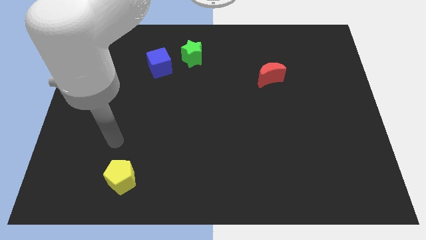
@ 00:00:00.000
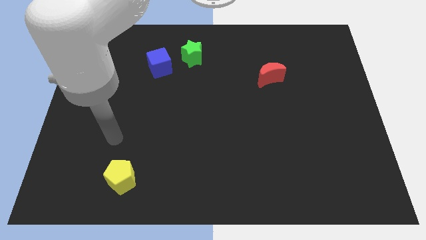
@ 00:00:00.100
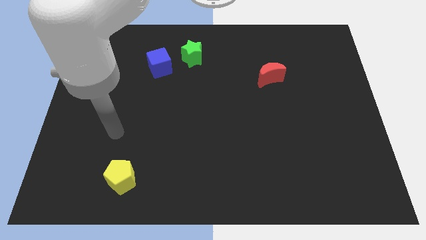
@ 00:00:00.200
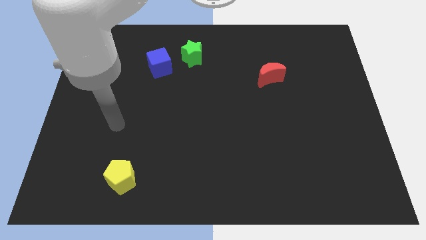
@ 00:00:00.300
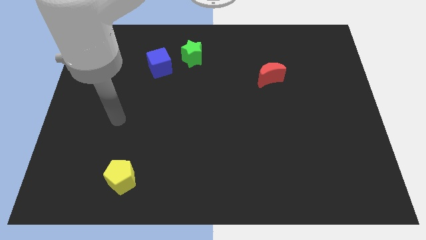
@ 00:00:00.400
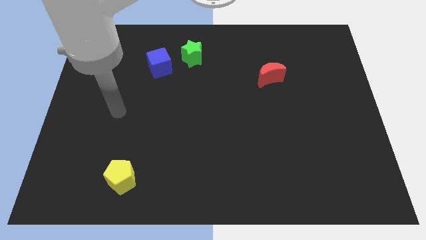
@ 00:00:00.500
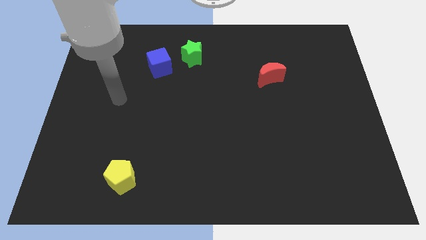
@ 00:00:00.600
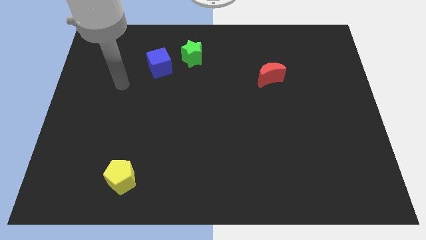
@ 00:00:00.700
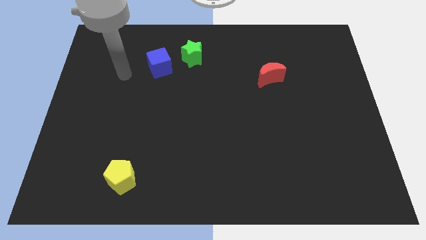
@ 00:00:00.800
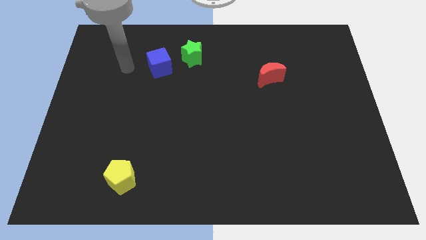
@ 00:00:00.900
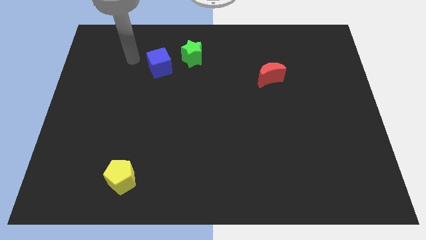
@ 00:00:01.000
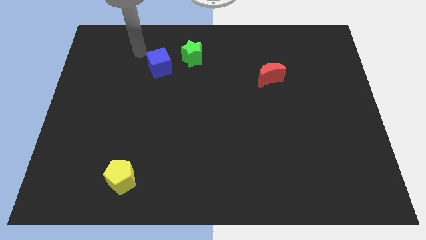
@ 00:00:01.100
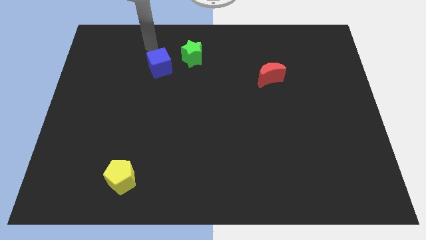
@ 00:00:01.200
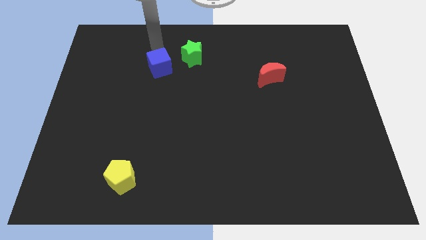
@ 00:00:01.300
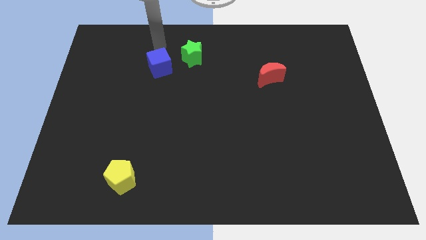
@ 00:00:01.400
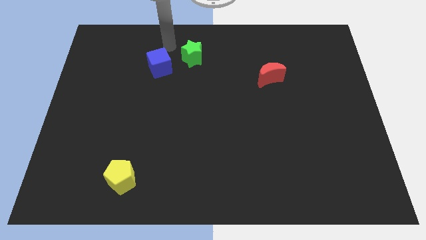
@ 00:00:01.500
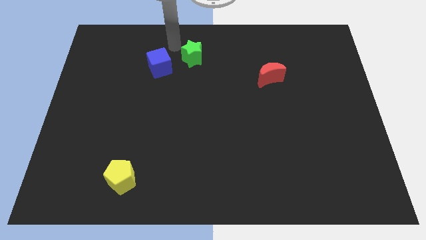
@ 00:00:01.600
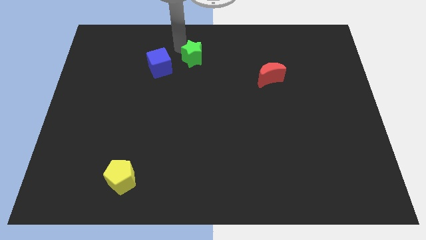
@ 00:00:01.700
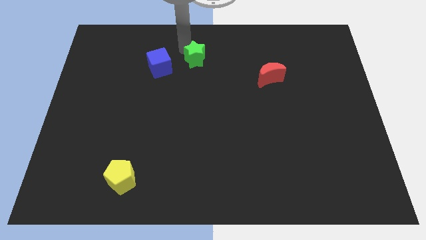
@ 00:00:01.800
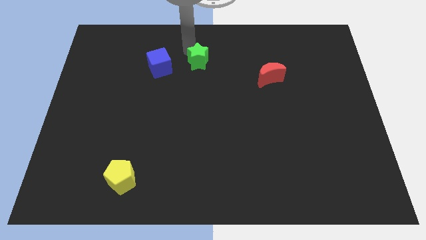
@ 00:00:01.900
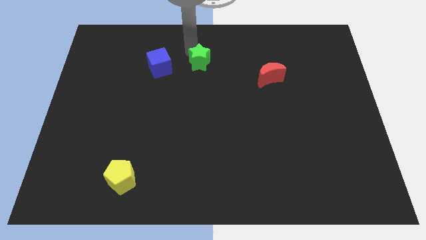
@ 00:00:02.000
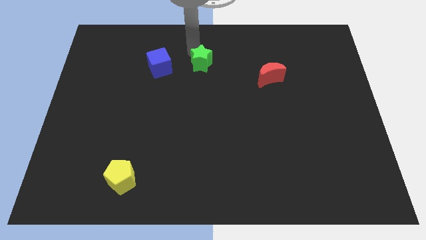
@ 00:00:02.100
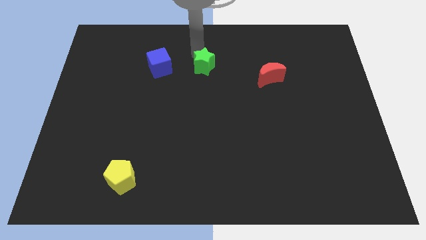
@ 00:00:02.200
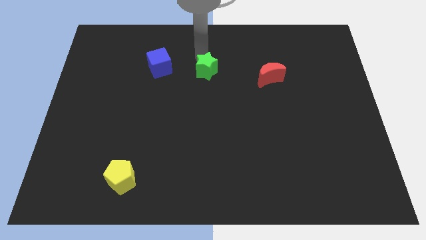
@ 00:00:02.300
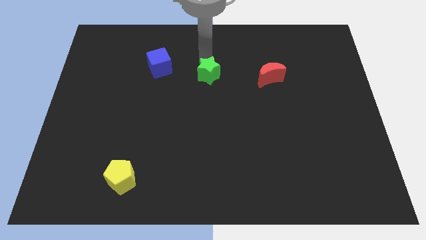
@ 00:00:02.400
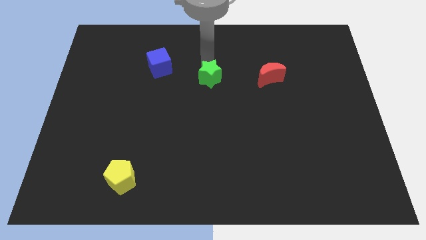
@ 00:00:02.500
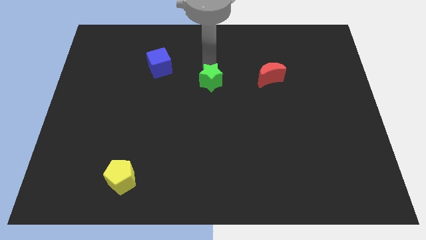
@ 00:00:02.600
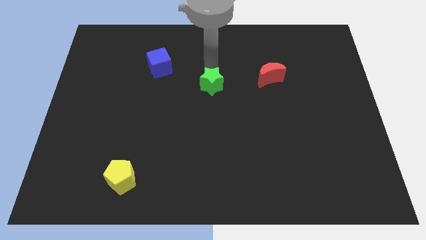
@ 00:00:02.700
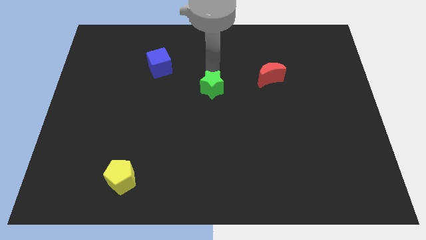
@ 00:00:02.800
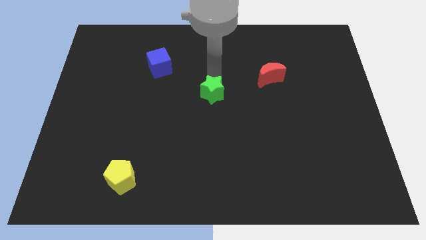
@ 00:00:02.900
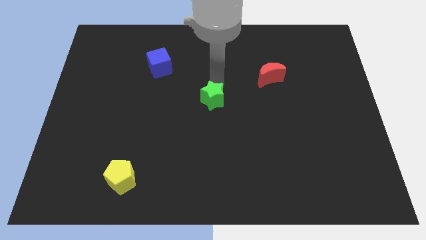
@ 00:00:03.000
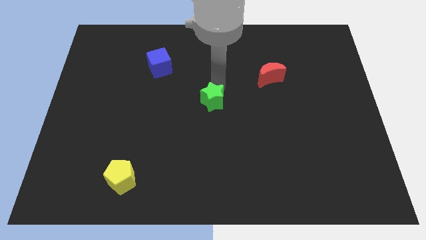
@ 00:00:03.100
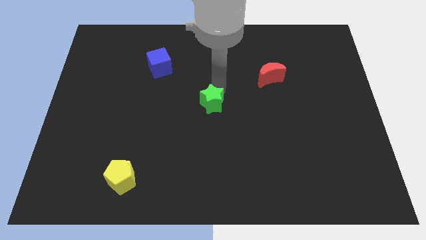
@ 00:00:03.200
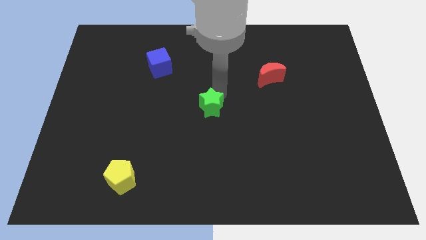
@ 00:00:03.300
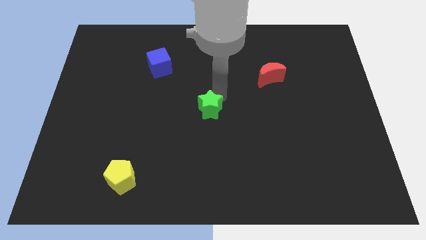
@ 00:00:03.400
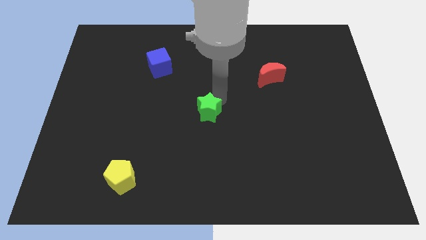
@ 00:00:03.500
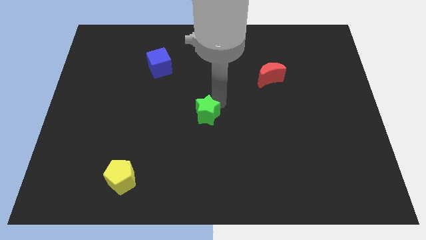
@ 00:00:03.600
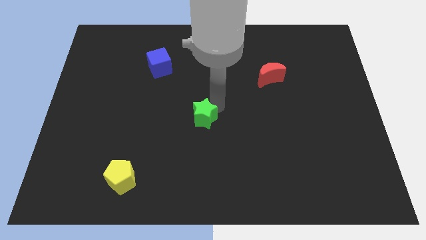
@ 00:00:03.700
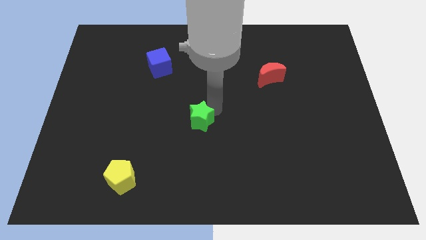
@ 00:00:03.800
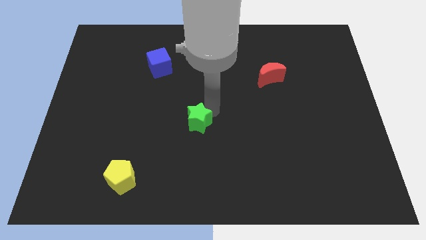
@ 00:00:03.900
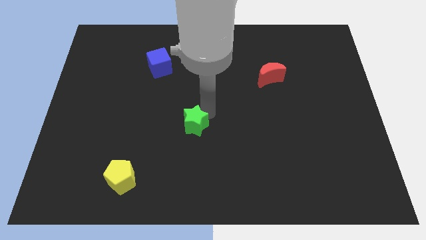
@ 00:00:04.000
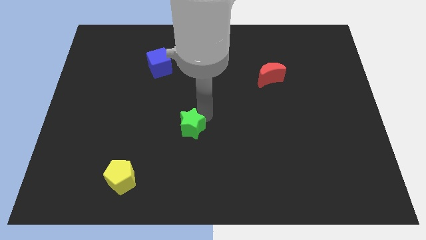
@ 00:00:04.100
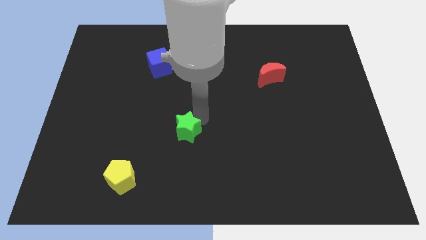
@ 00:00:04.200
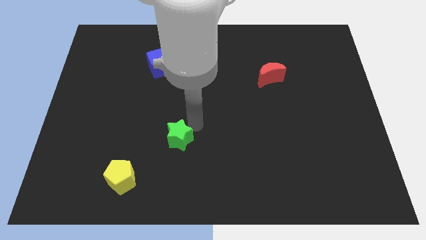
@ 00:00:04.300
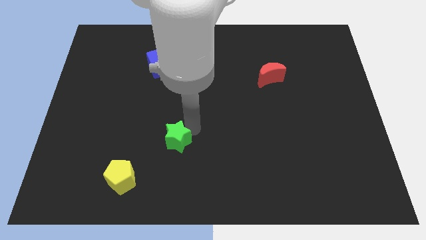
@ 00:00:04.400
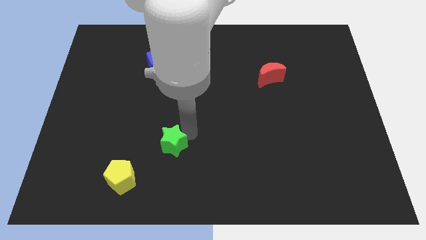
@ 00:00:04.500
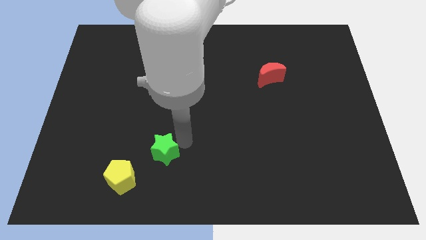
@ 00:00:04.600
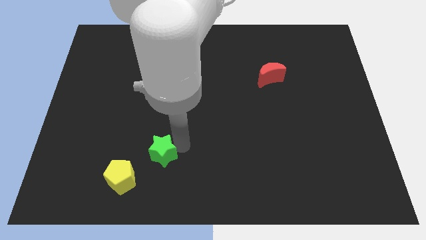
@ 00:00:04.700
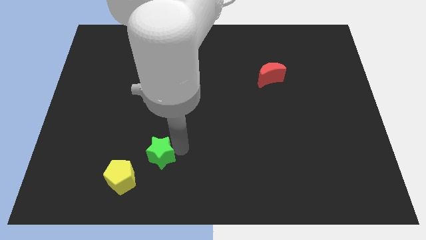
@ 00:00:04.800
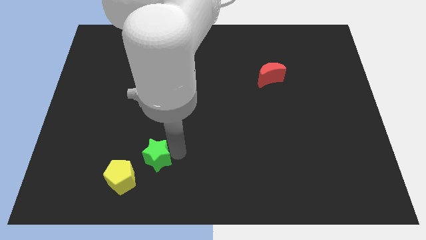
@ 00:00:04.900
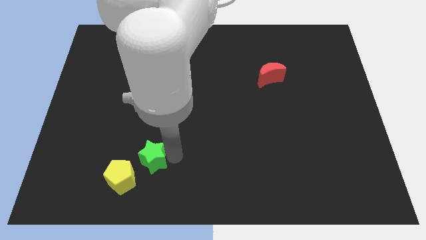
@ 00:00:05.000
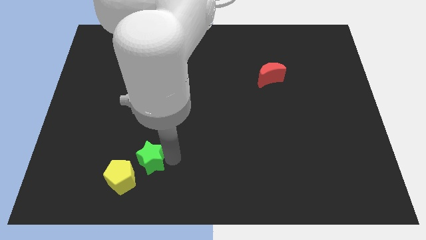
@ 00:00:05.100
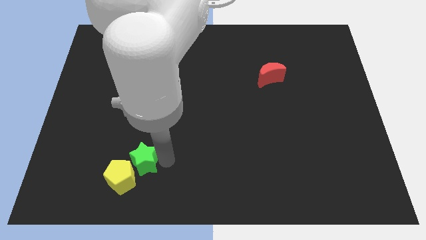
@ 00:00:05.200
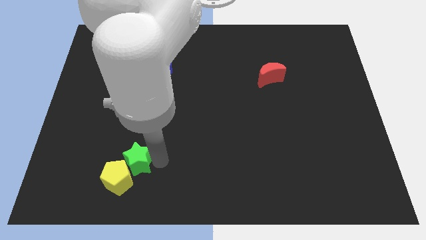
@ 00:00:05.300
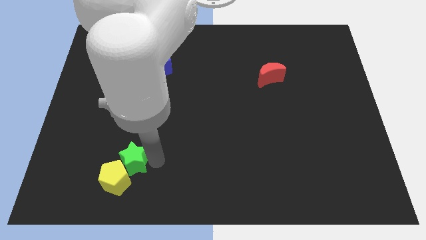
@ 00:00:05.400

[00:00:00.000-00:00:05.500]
slide the green star close to the yellow pentagon

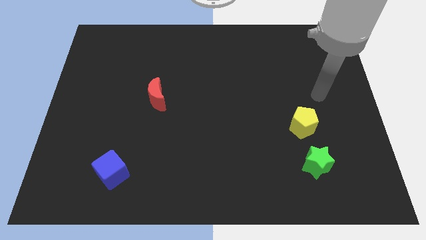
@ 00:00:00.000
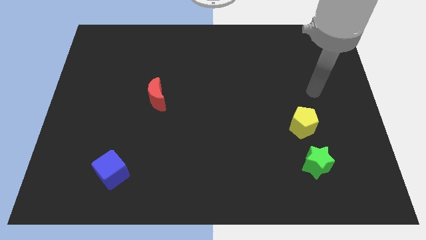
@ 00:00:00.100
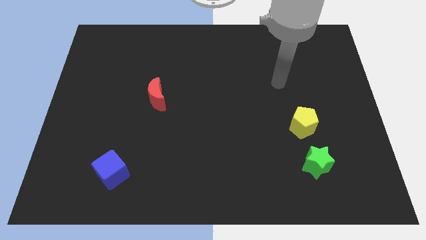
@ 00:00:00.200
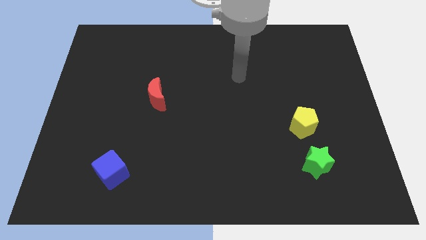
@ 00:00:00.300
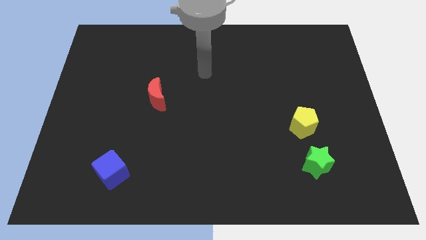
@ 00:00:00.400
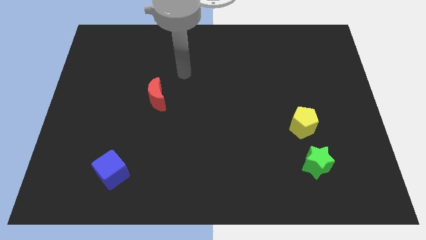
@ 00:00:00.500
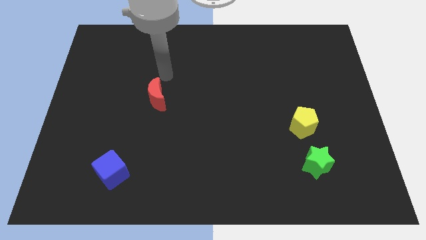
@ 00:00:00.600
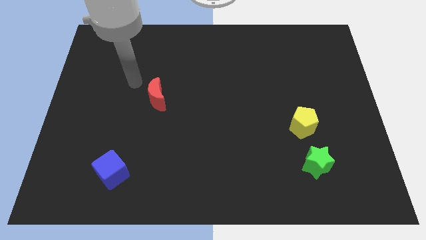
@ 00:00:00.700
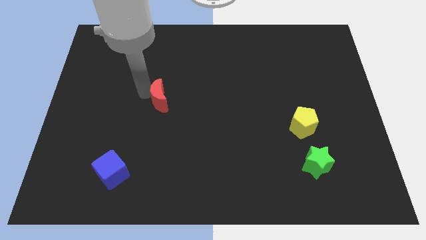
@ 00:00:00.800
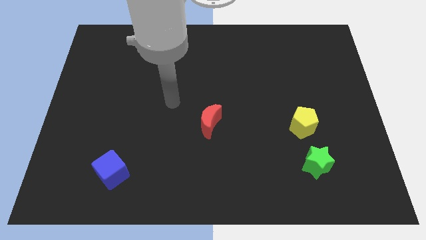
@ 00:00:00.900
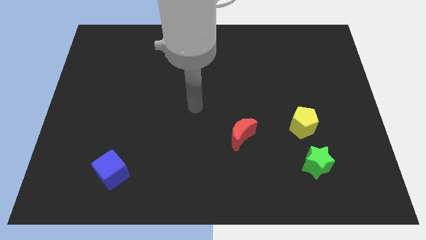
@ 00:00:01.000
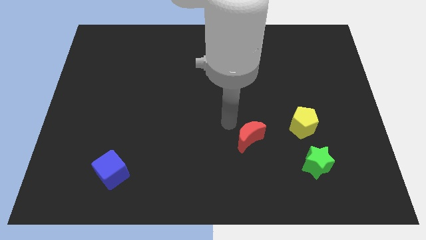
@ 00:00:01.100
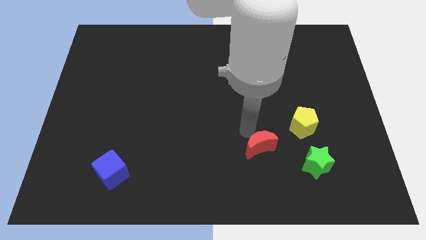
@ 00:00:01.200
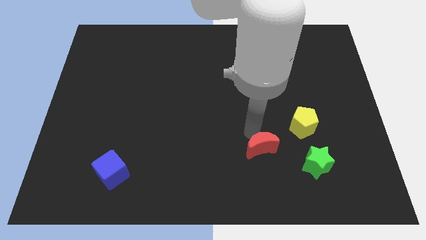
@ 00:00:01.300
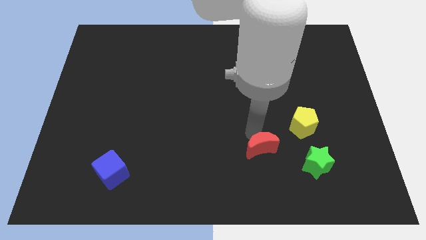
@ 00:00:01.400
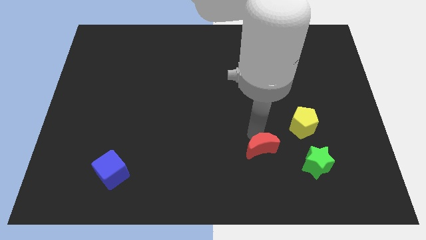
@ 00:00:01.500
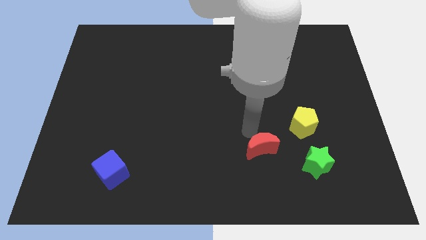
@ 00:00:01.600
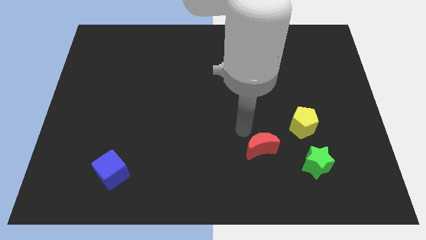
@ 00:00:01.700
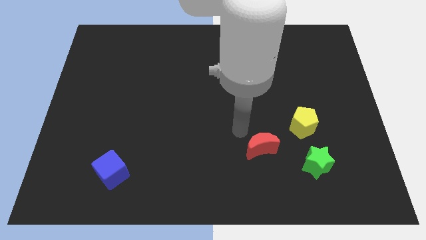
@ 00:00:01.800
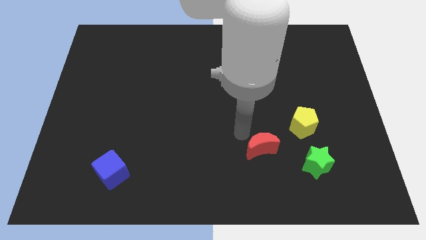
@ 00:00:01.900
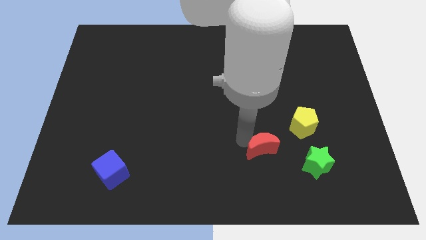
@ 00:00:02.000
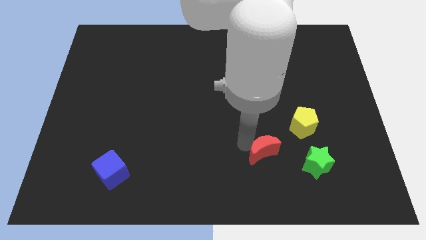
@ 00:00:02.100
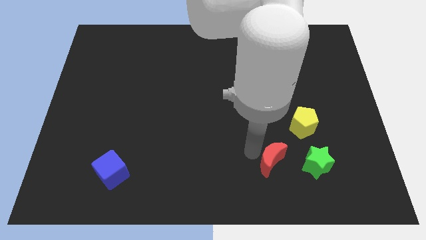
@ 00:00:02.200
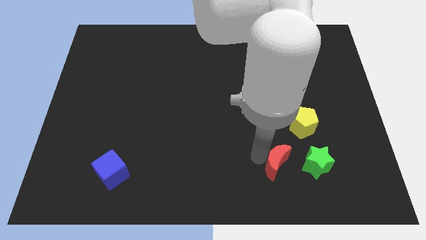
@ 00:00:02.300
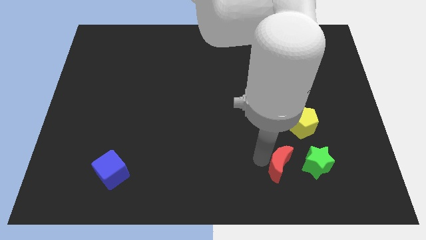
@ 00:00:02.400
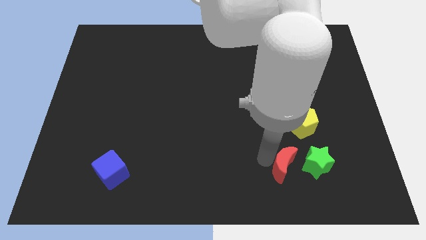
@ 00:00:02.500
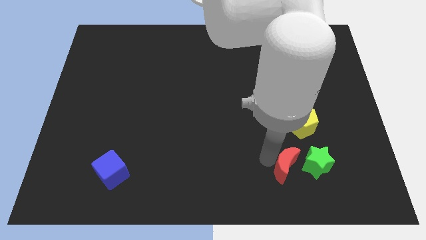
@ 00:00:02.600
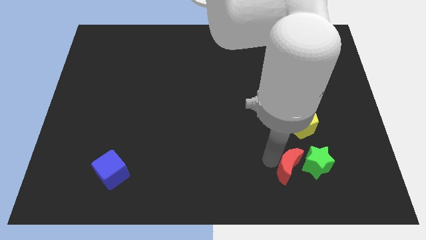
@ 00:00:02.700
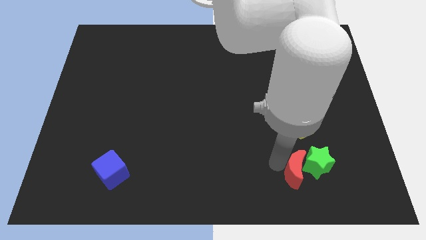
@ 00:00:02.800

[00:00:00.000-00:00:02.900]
slide the moon towards the green star
